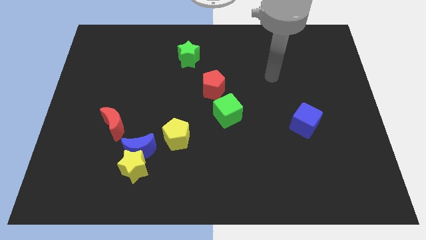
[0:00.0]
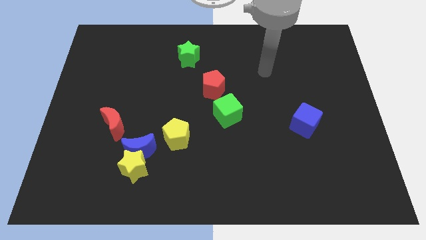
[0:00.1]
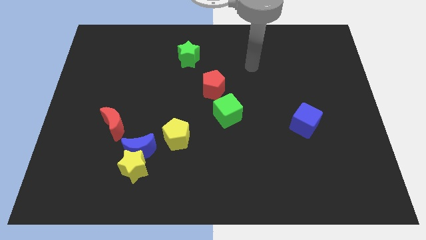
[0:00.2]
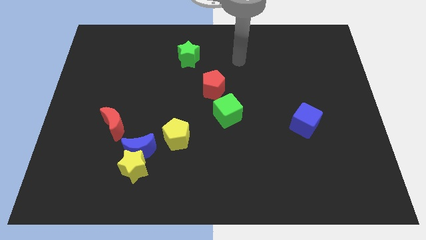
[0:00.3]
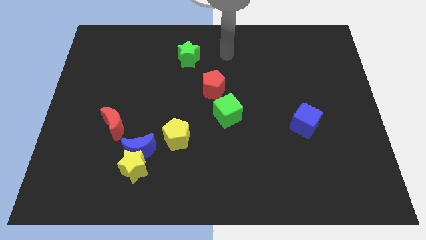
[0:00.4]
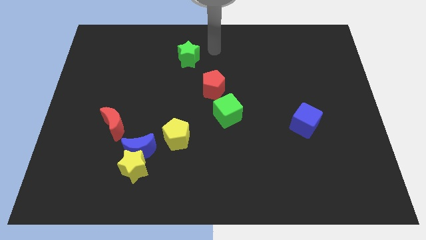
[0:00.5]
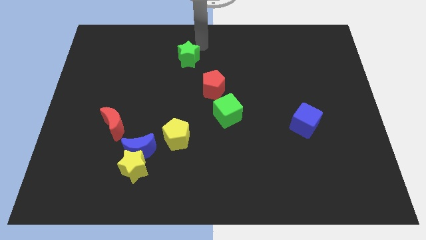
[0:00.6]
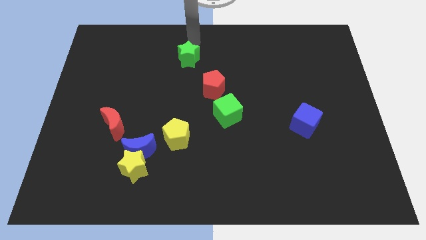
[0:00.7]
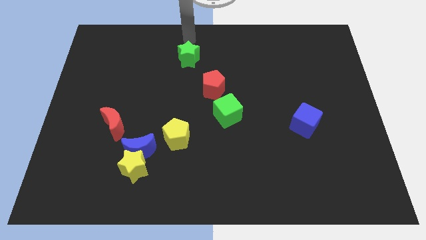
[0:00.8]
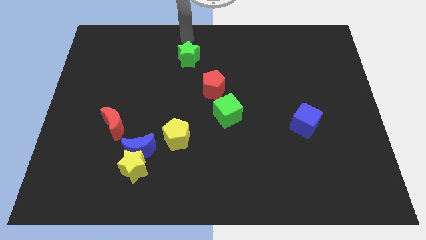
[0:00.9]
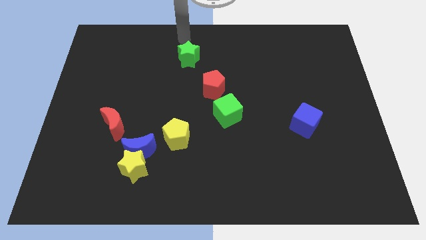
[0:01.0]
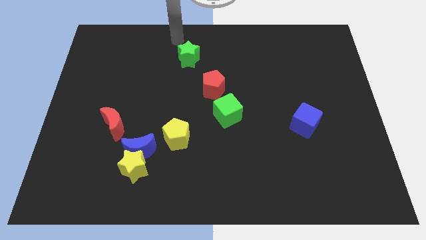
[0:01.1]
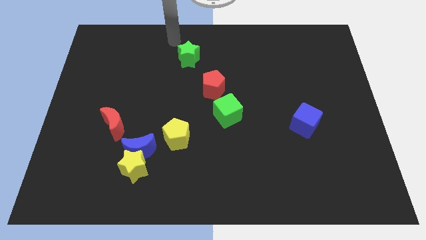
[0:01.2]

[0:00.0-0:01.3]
move your arm to the top of the green star

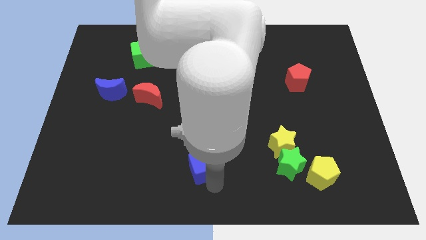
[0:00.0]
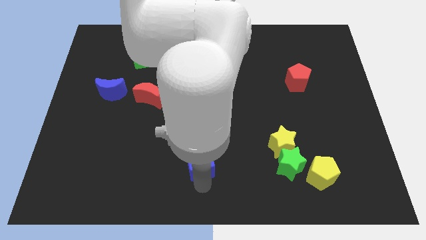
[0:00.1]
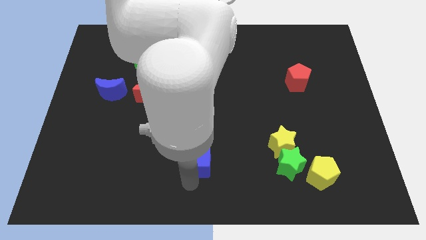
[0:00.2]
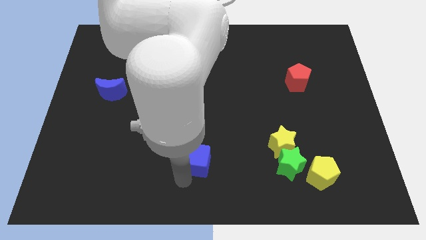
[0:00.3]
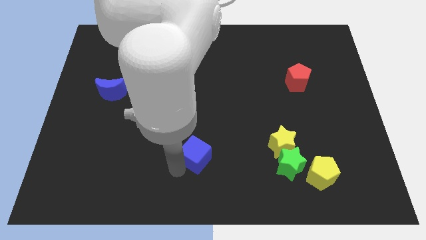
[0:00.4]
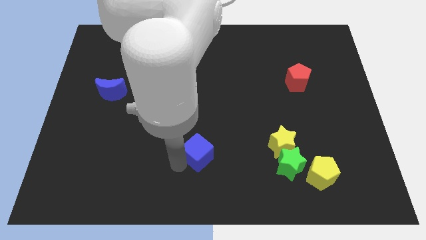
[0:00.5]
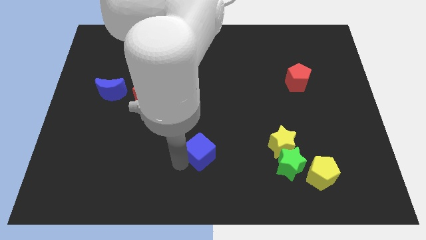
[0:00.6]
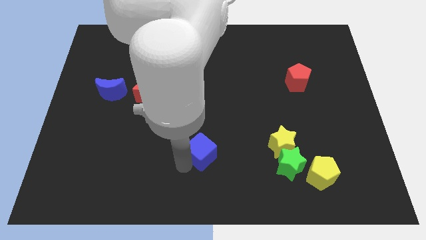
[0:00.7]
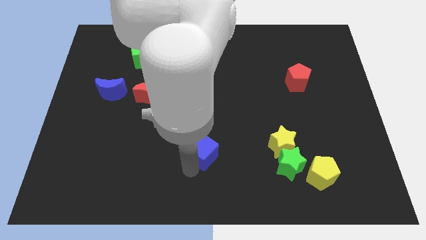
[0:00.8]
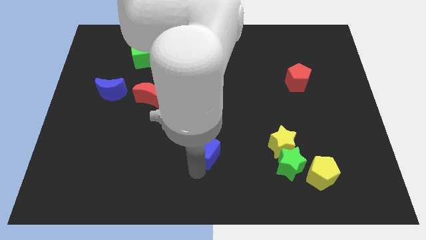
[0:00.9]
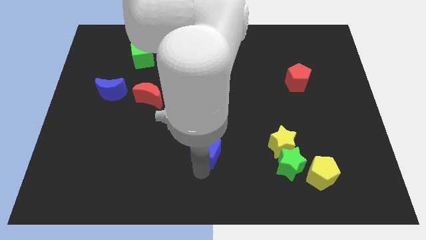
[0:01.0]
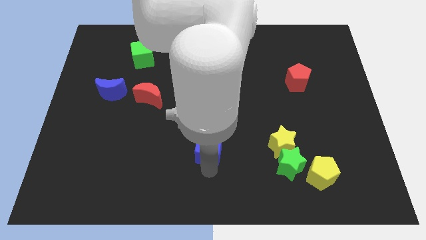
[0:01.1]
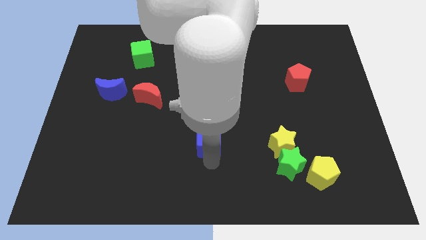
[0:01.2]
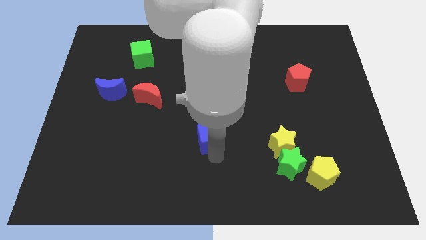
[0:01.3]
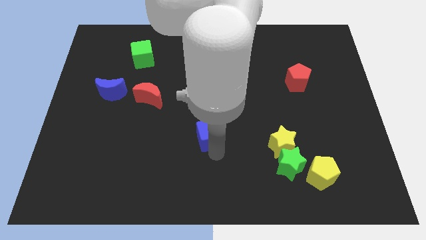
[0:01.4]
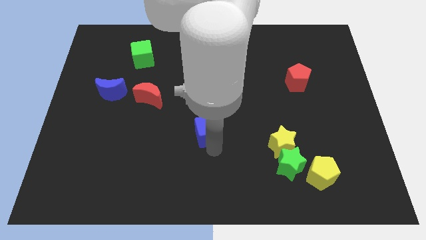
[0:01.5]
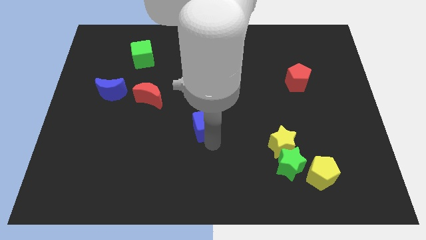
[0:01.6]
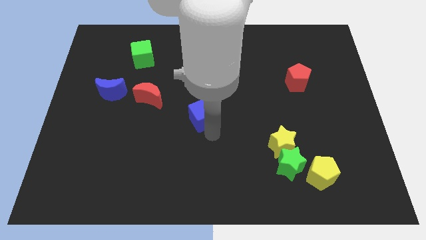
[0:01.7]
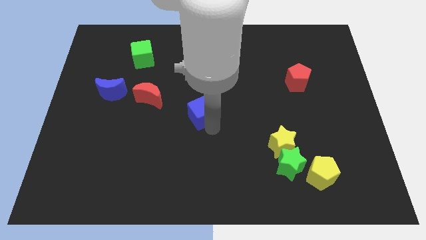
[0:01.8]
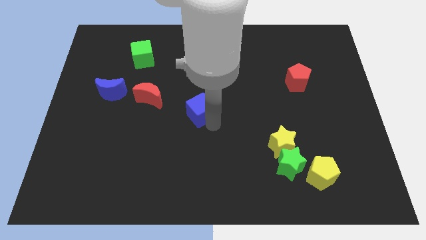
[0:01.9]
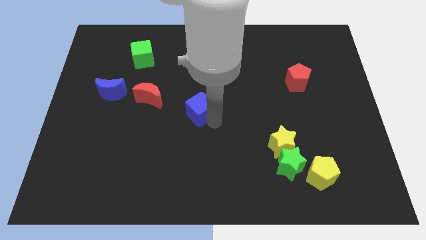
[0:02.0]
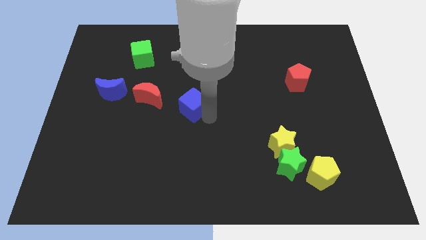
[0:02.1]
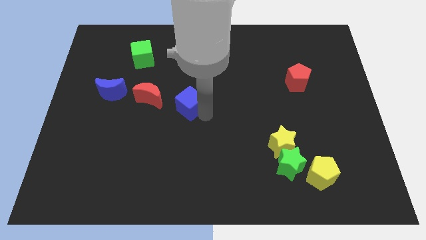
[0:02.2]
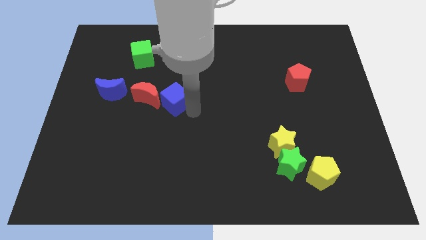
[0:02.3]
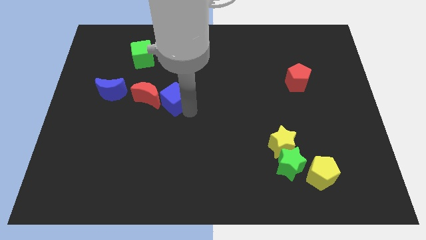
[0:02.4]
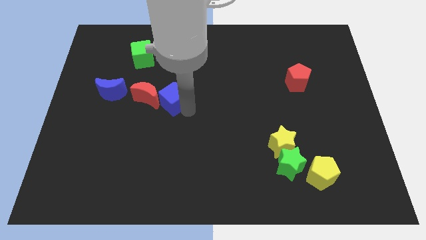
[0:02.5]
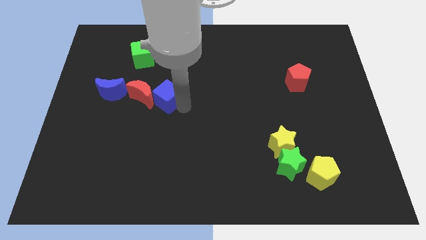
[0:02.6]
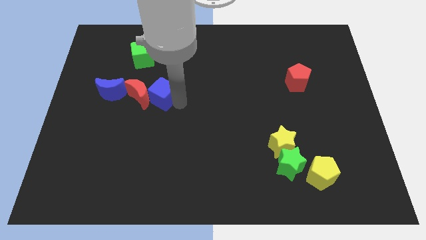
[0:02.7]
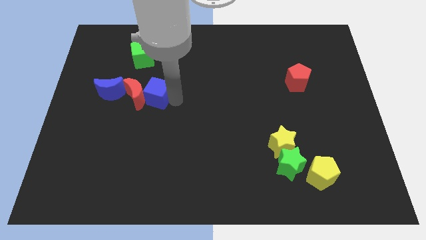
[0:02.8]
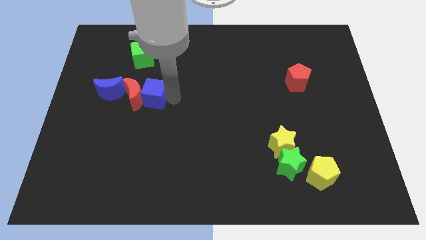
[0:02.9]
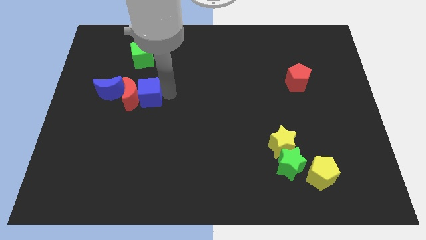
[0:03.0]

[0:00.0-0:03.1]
slide blue cube into red moon

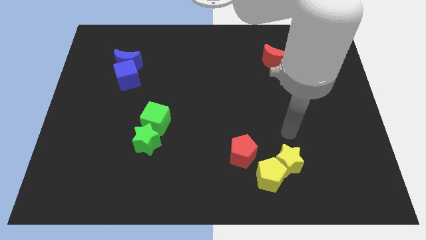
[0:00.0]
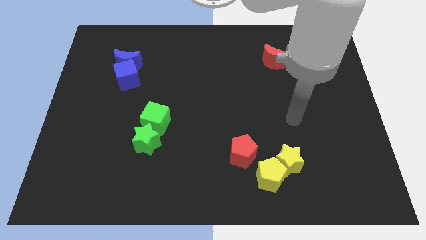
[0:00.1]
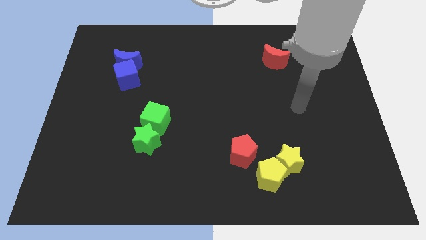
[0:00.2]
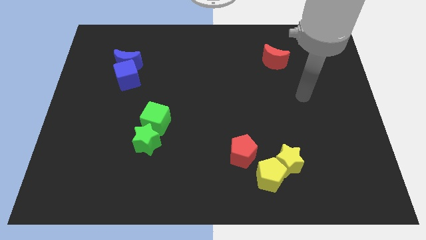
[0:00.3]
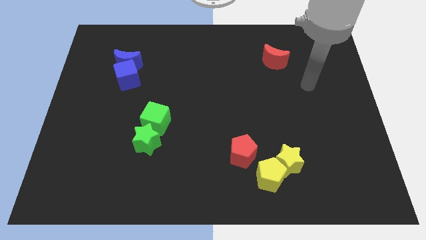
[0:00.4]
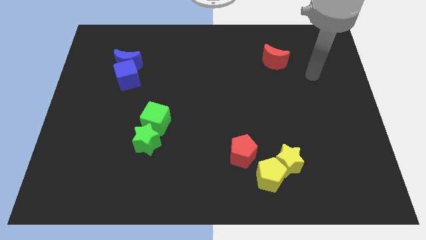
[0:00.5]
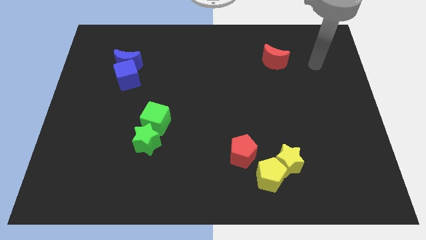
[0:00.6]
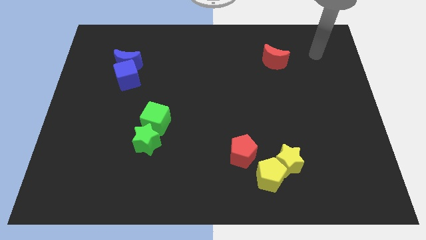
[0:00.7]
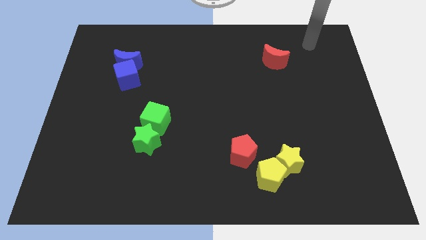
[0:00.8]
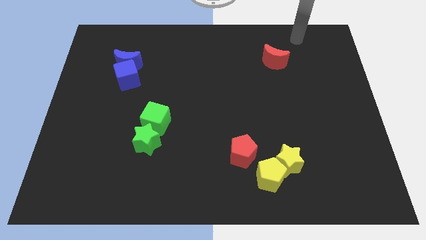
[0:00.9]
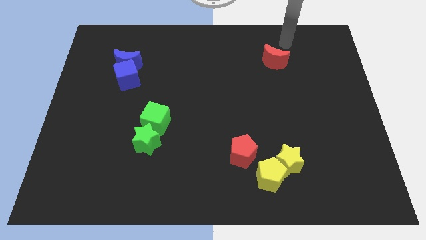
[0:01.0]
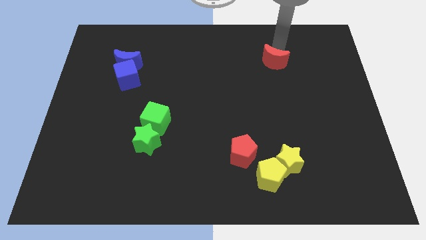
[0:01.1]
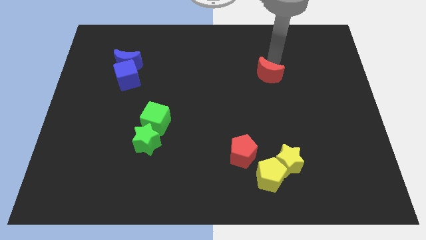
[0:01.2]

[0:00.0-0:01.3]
move the arm to the red crescent

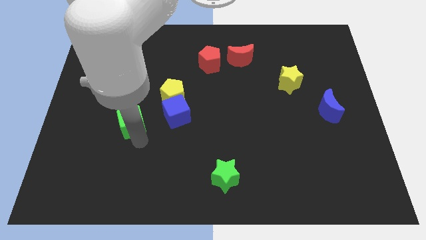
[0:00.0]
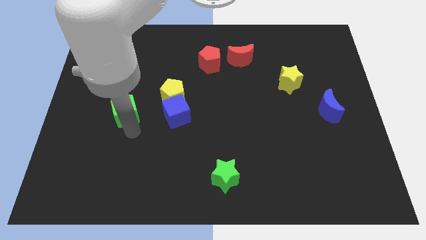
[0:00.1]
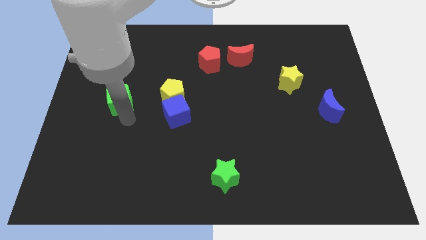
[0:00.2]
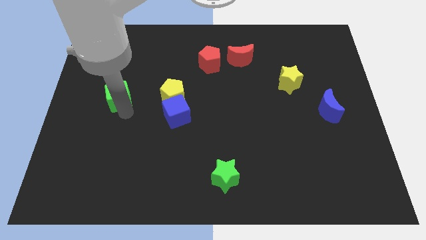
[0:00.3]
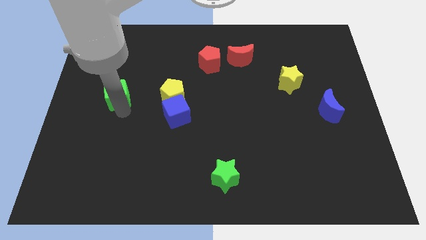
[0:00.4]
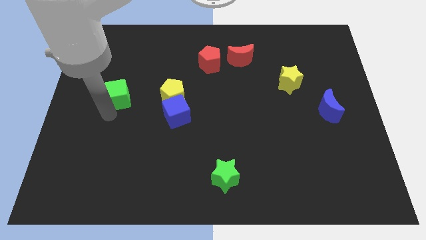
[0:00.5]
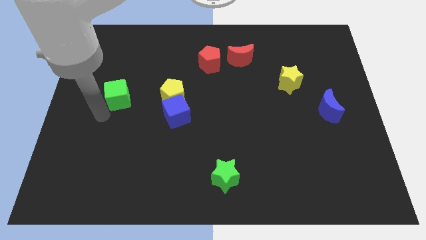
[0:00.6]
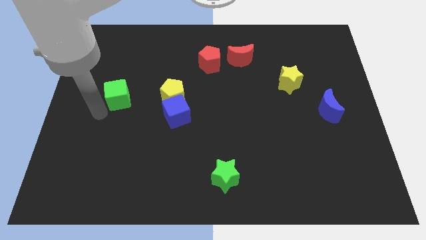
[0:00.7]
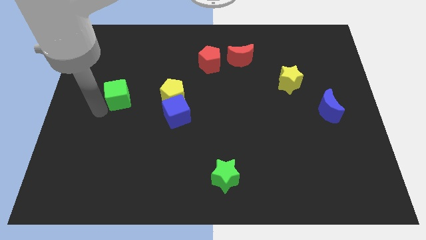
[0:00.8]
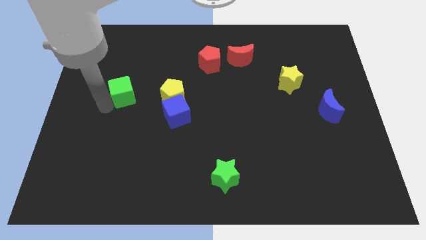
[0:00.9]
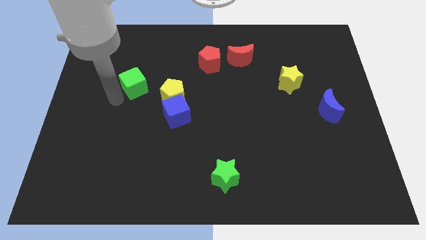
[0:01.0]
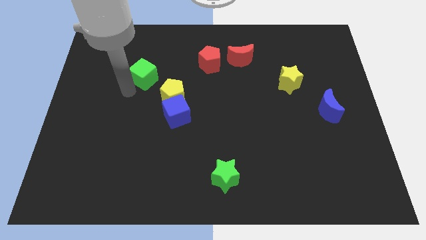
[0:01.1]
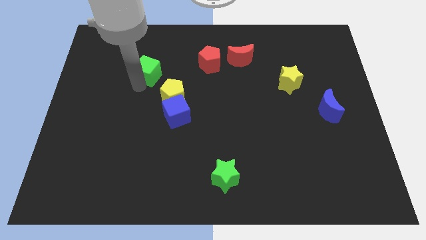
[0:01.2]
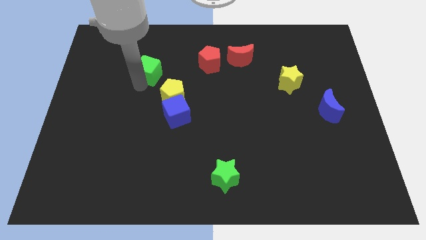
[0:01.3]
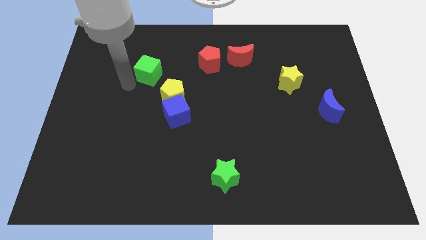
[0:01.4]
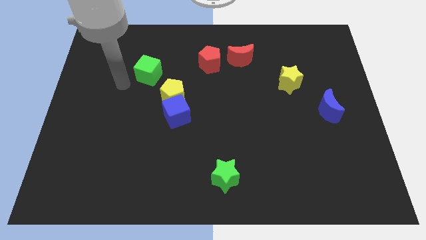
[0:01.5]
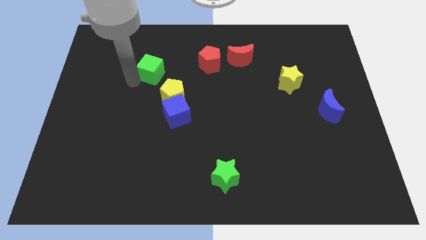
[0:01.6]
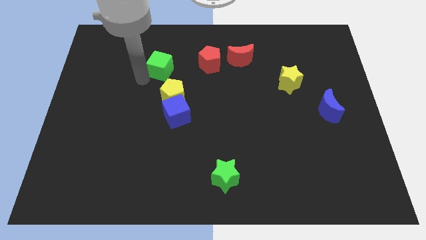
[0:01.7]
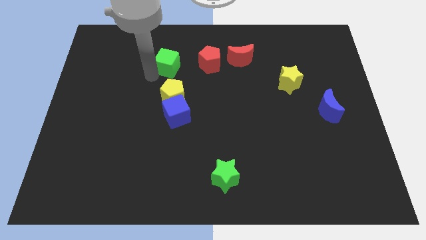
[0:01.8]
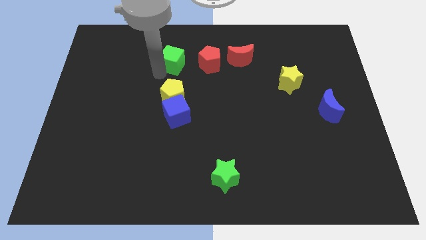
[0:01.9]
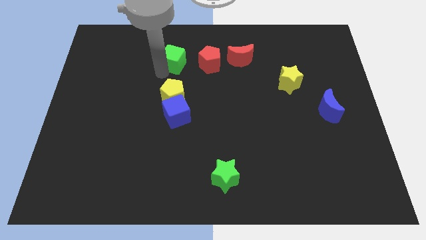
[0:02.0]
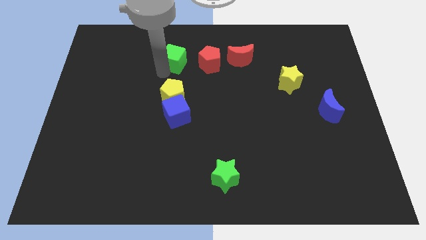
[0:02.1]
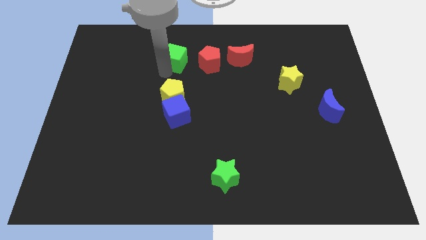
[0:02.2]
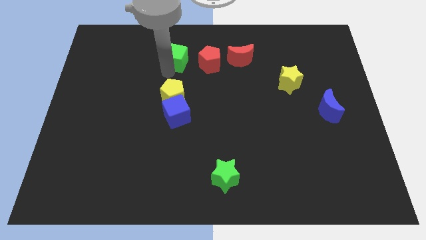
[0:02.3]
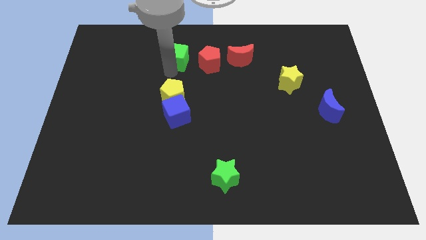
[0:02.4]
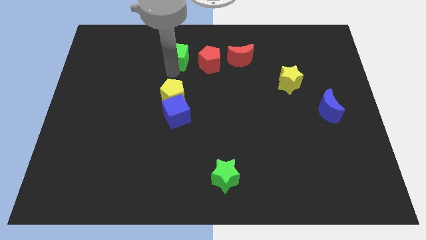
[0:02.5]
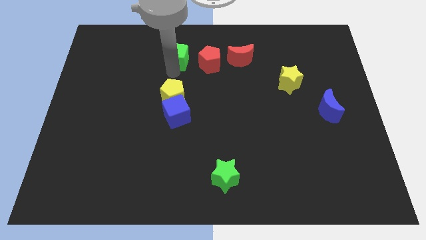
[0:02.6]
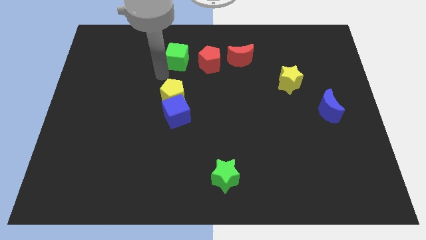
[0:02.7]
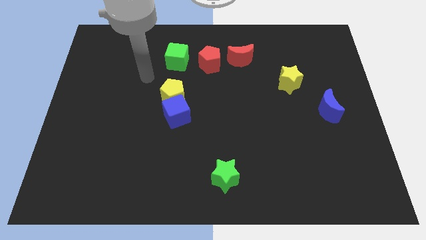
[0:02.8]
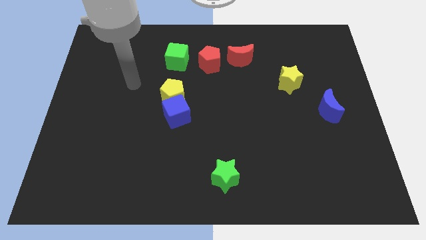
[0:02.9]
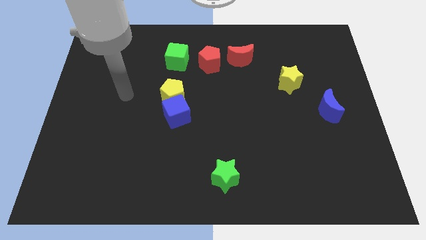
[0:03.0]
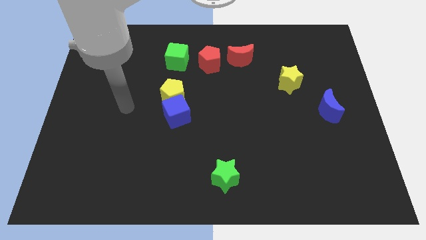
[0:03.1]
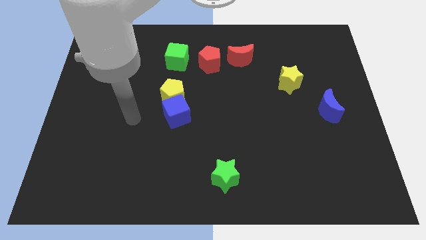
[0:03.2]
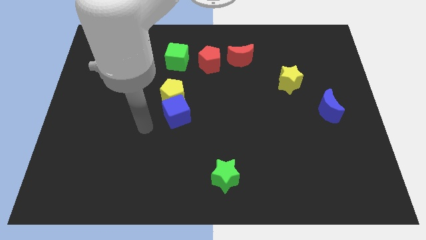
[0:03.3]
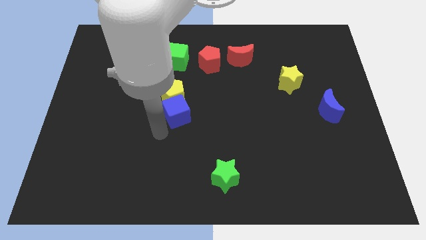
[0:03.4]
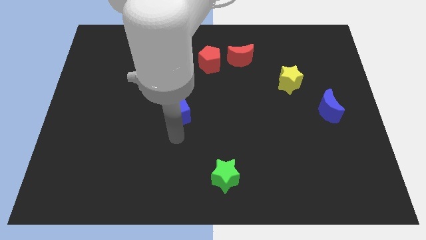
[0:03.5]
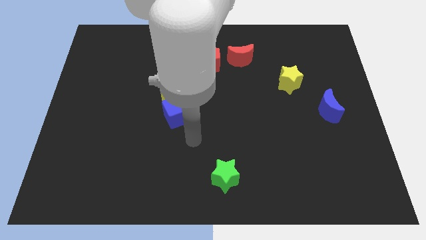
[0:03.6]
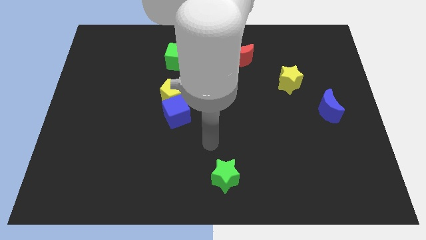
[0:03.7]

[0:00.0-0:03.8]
place the green cube above the yellow pentagon
